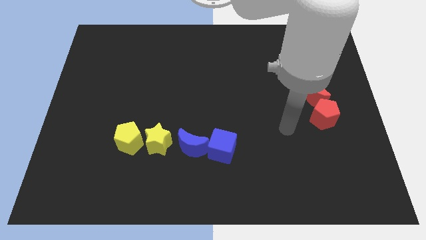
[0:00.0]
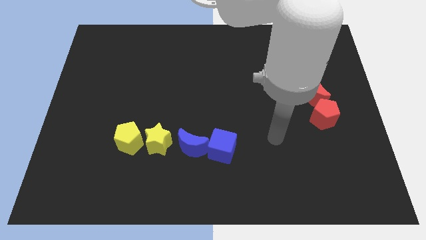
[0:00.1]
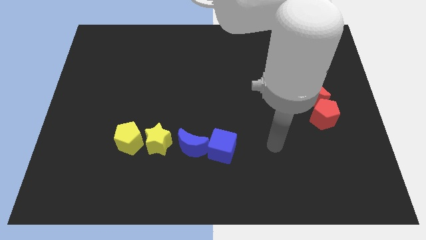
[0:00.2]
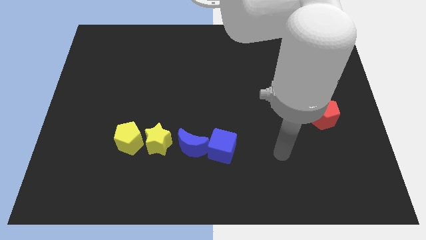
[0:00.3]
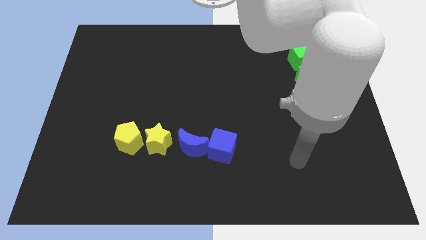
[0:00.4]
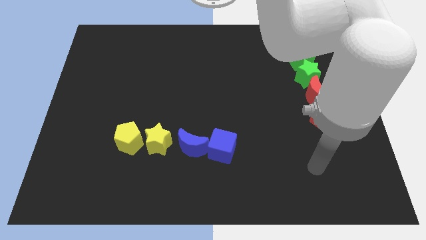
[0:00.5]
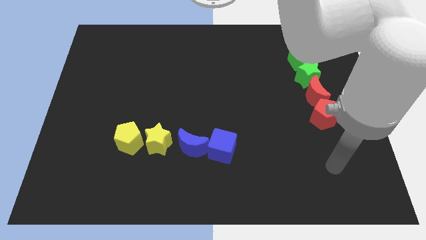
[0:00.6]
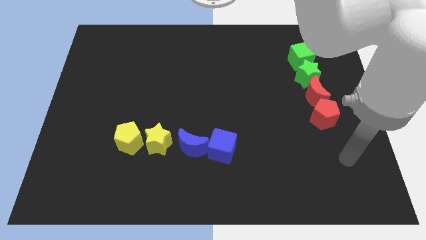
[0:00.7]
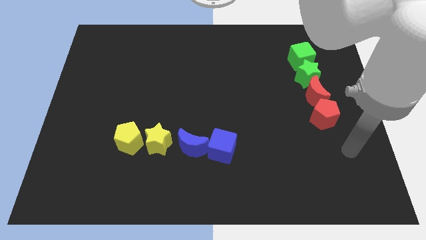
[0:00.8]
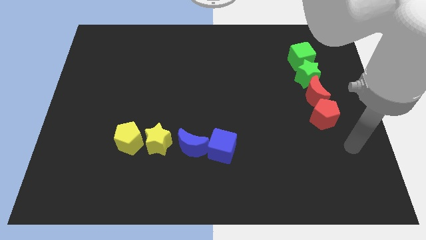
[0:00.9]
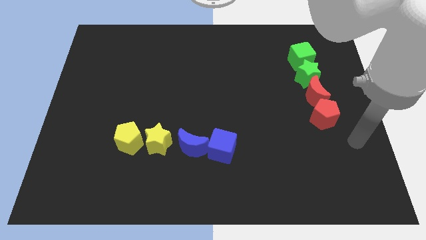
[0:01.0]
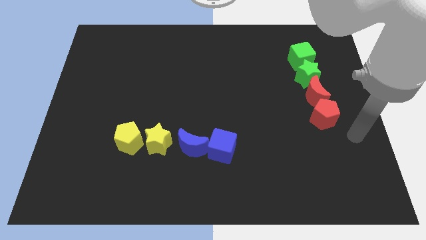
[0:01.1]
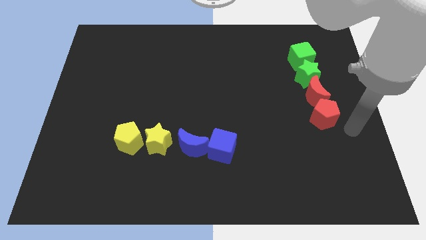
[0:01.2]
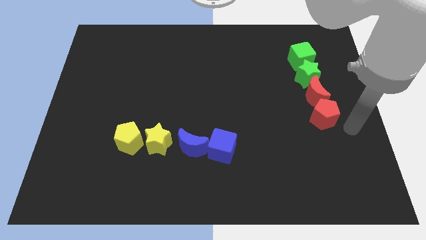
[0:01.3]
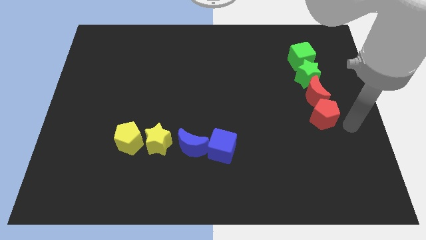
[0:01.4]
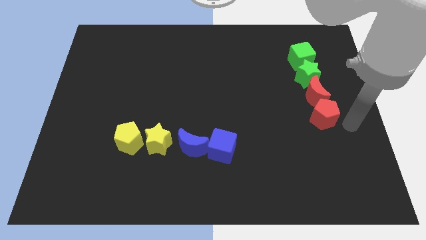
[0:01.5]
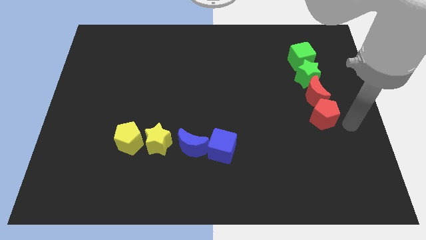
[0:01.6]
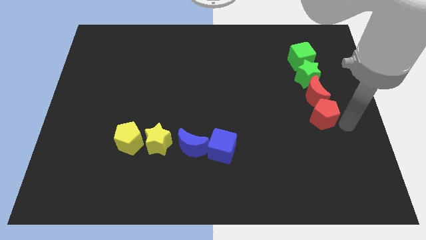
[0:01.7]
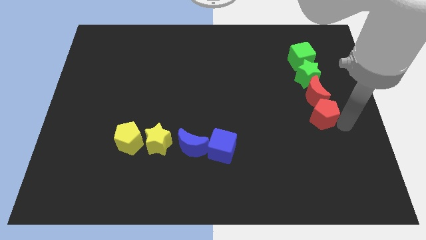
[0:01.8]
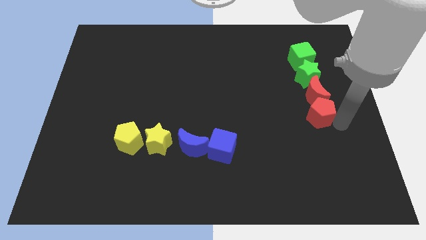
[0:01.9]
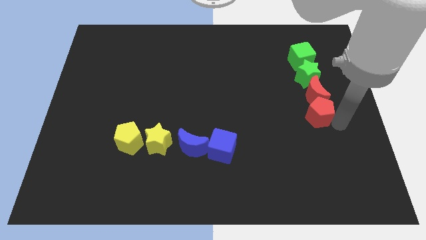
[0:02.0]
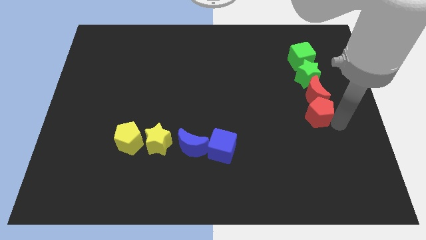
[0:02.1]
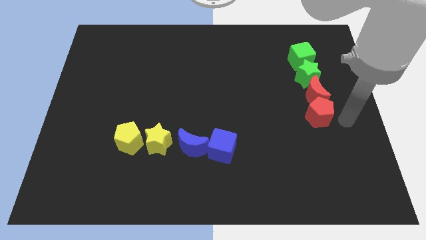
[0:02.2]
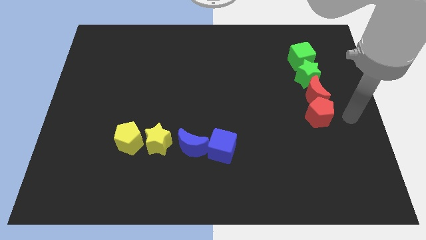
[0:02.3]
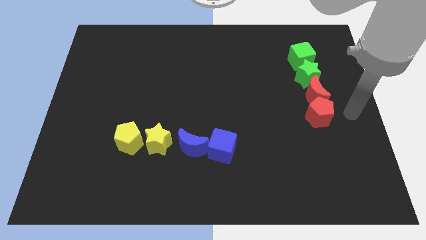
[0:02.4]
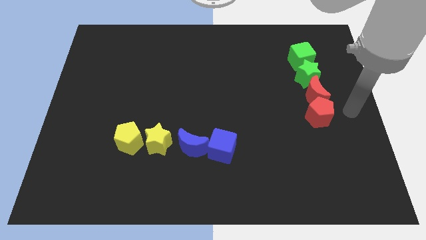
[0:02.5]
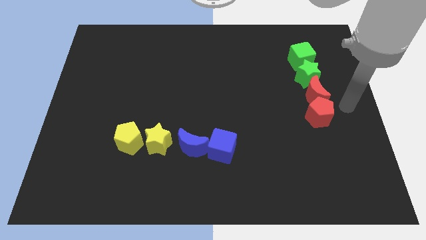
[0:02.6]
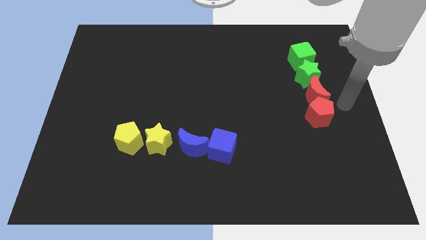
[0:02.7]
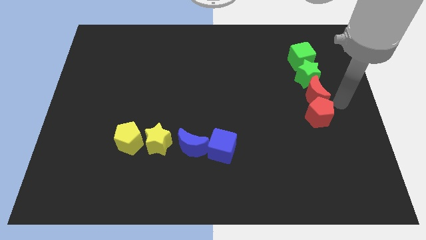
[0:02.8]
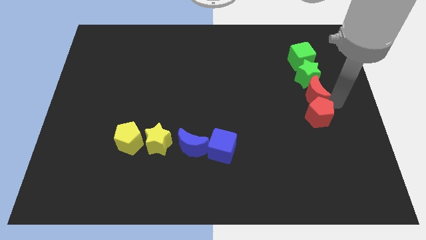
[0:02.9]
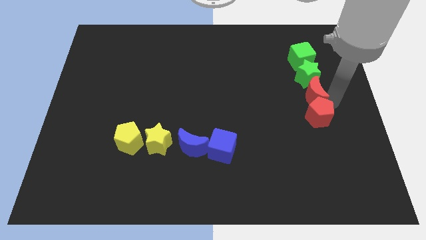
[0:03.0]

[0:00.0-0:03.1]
tap on the red moon

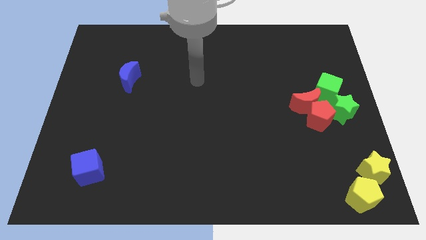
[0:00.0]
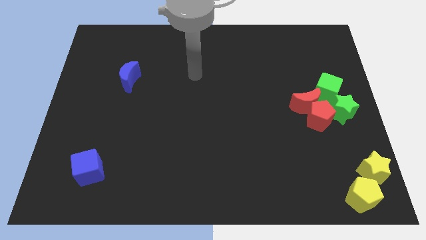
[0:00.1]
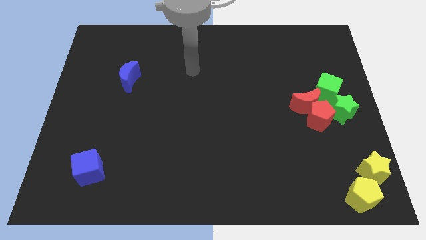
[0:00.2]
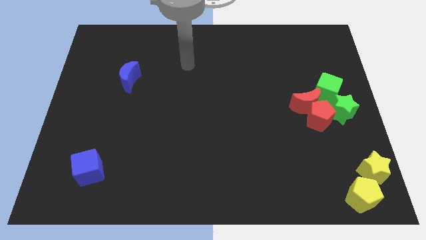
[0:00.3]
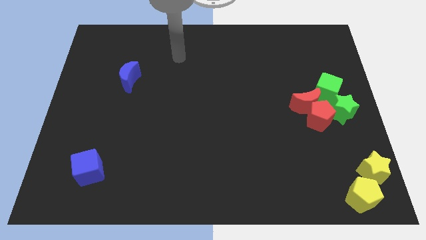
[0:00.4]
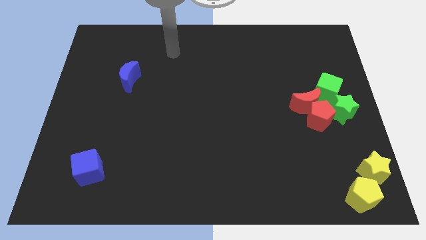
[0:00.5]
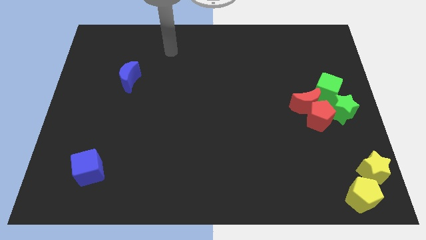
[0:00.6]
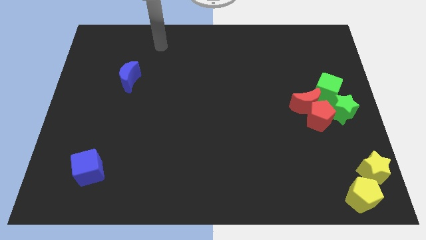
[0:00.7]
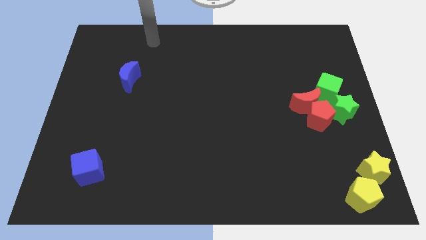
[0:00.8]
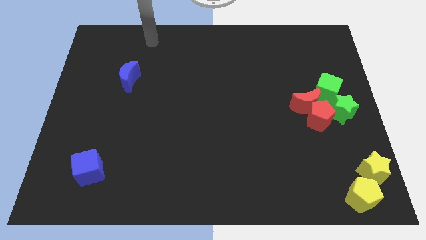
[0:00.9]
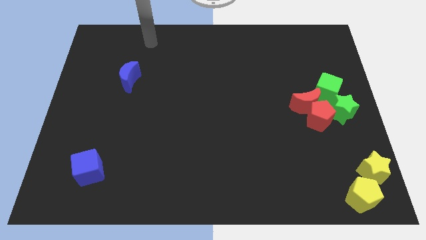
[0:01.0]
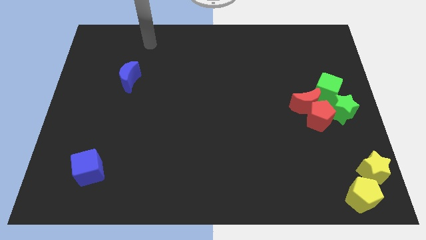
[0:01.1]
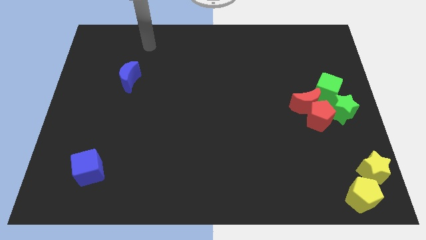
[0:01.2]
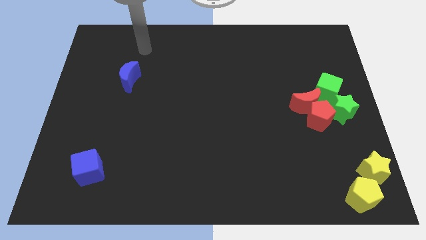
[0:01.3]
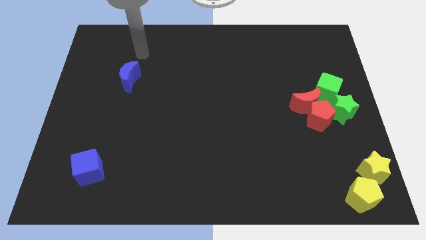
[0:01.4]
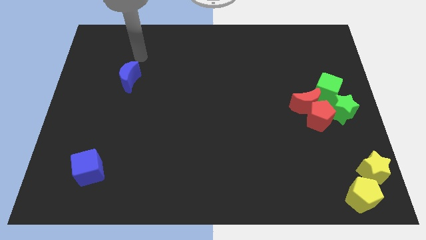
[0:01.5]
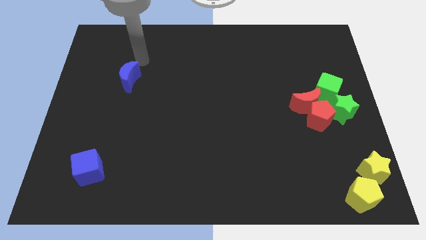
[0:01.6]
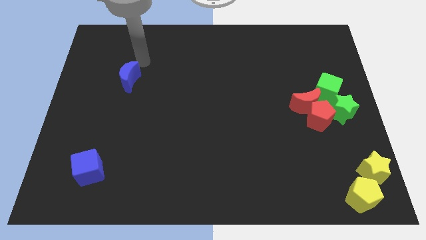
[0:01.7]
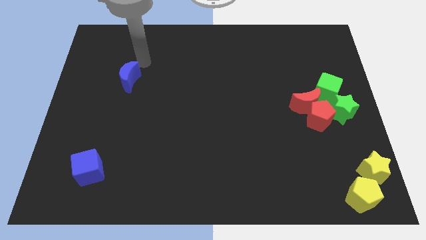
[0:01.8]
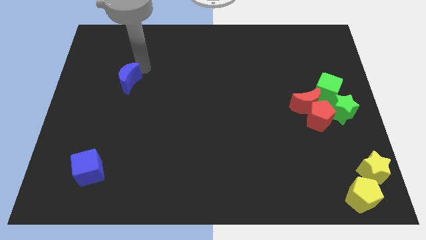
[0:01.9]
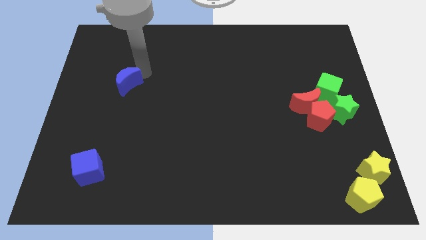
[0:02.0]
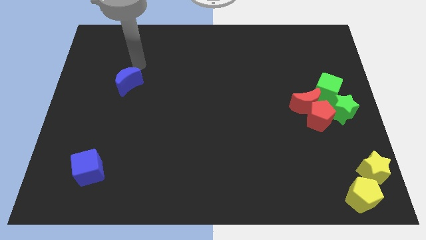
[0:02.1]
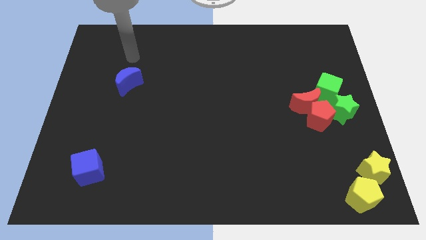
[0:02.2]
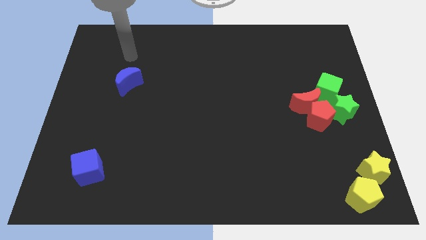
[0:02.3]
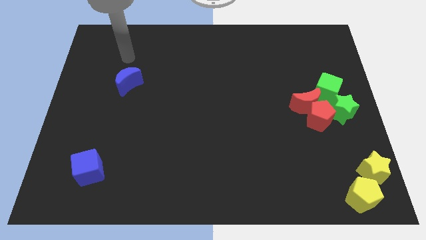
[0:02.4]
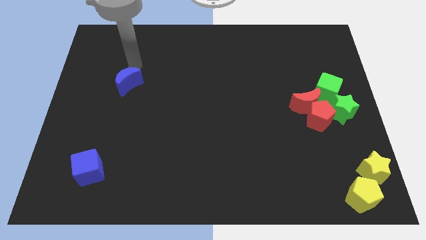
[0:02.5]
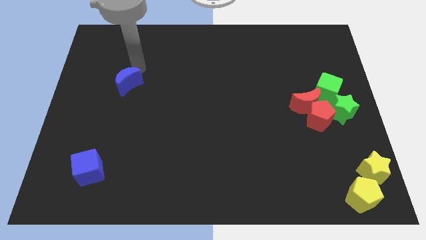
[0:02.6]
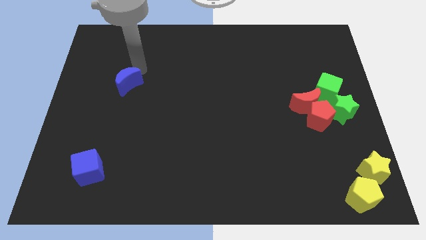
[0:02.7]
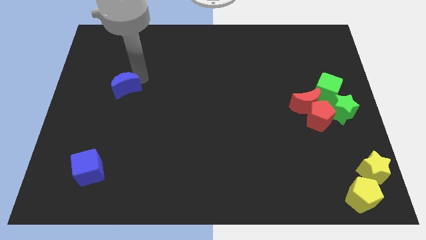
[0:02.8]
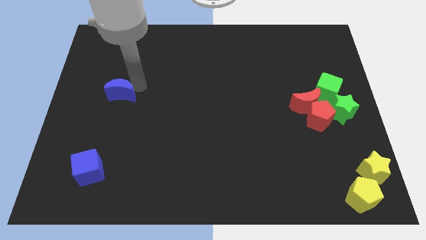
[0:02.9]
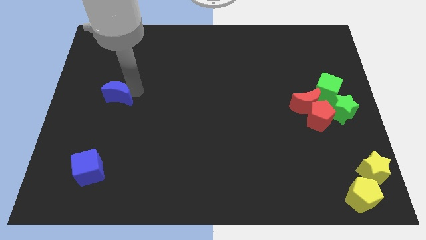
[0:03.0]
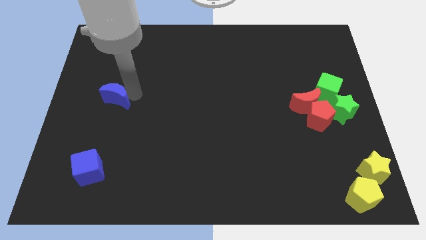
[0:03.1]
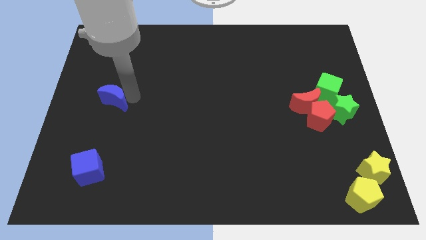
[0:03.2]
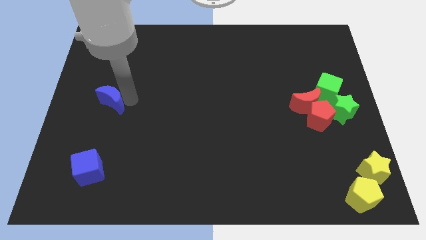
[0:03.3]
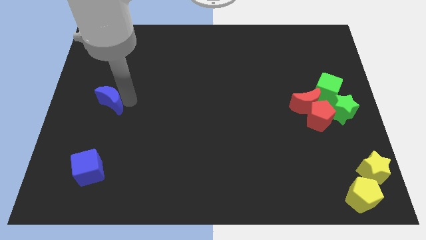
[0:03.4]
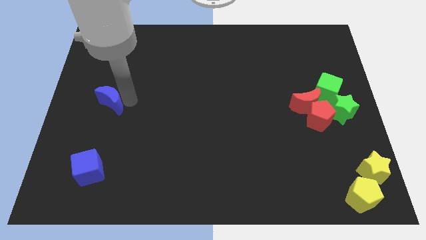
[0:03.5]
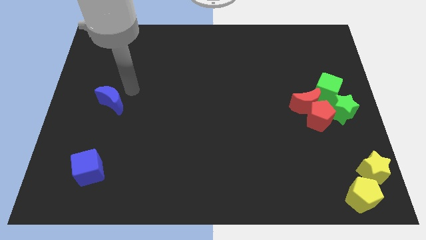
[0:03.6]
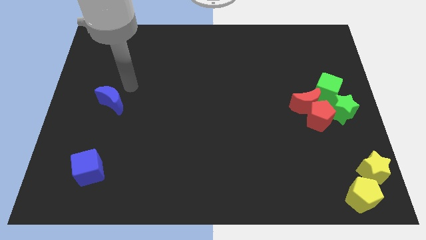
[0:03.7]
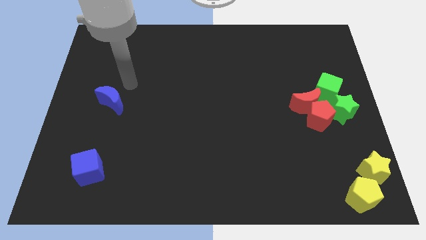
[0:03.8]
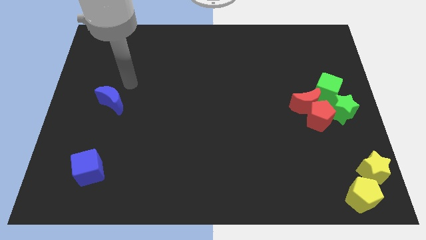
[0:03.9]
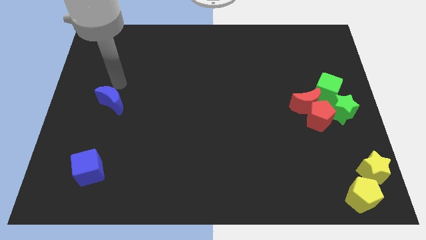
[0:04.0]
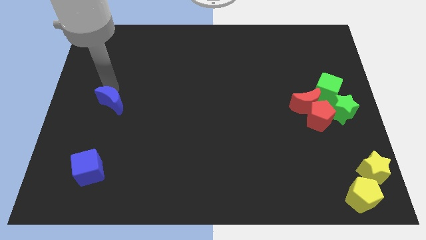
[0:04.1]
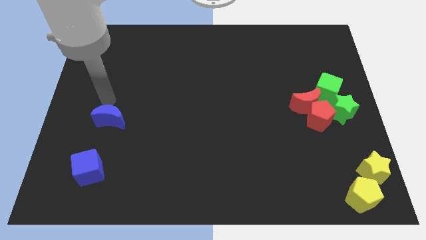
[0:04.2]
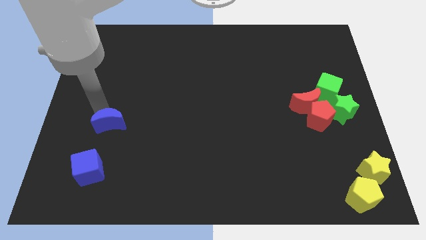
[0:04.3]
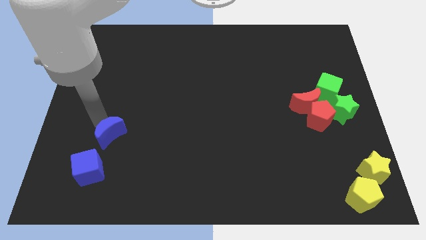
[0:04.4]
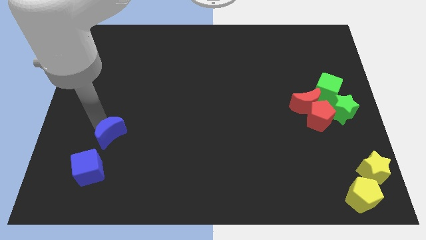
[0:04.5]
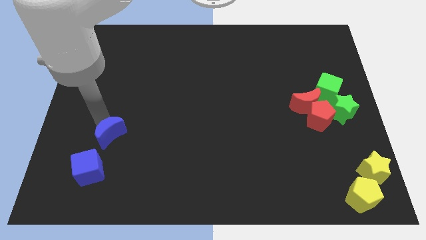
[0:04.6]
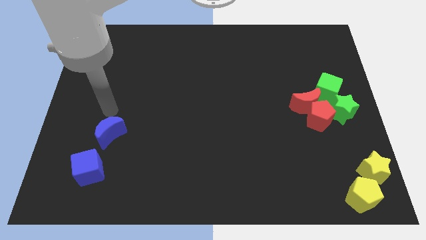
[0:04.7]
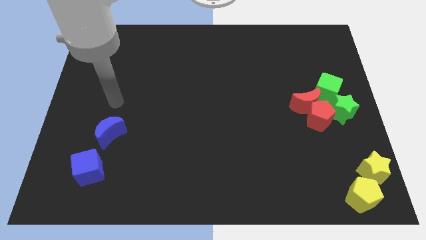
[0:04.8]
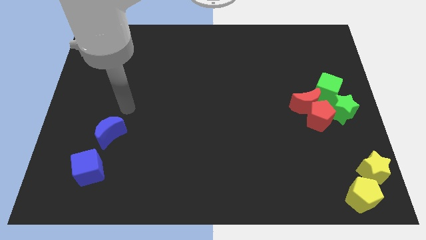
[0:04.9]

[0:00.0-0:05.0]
place blue moon to the top right of blue cube

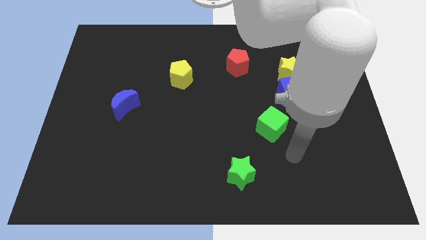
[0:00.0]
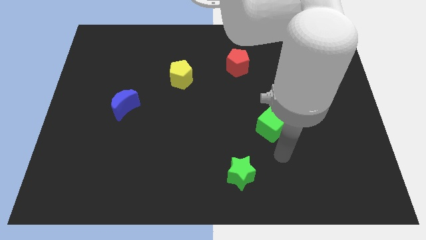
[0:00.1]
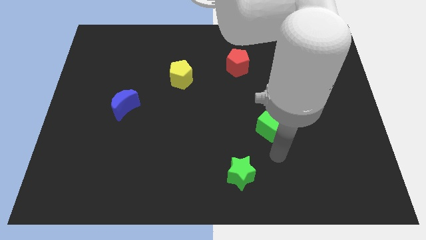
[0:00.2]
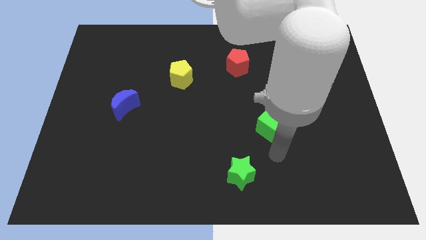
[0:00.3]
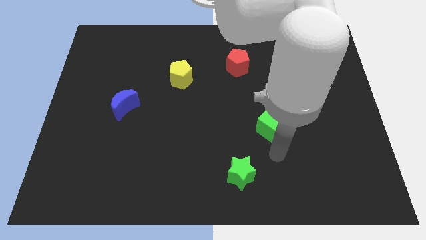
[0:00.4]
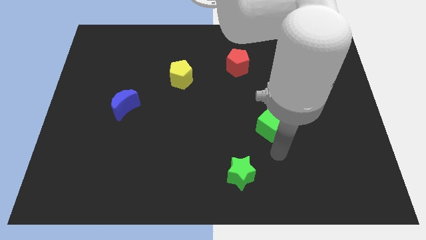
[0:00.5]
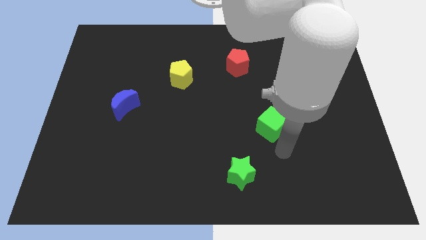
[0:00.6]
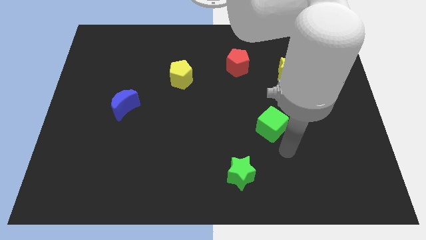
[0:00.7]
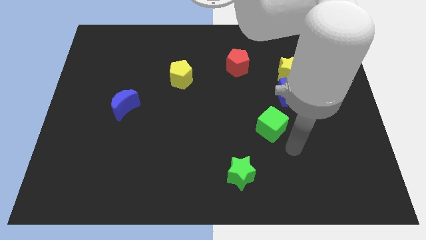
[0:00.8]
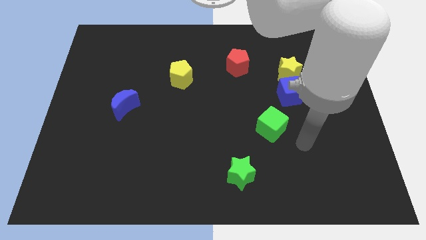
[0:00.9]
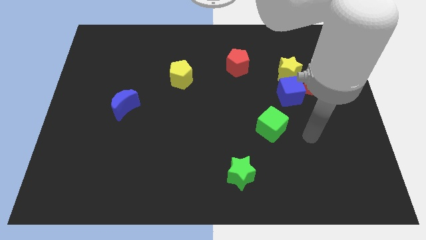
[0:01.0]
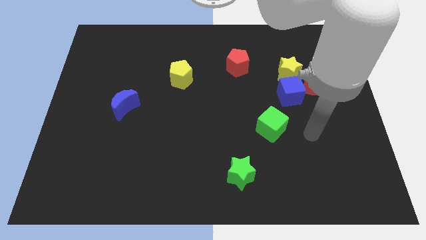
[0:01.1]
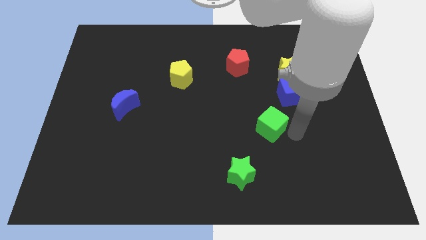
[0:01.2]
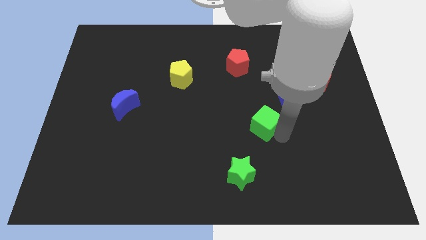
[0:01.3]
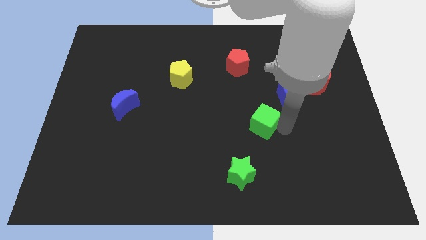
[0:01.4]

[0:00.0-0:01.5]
tap the green cube
